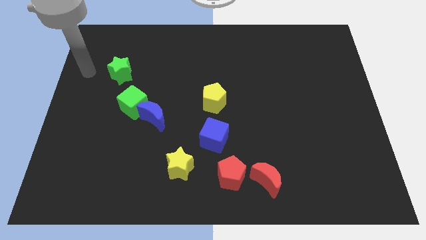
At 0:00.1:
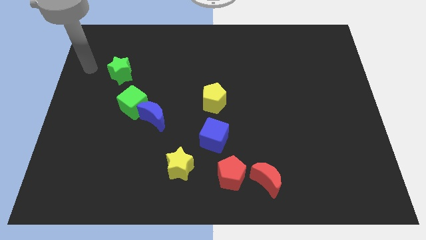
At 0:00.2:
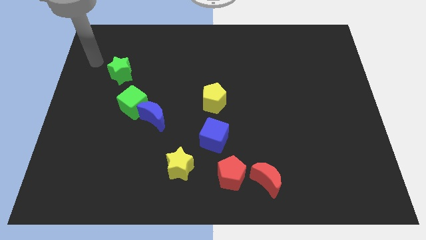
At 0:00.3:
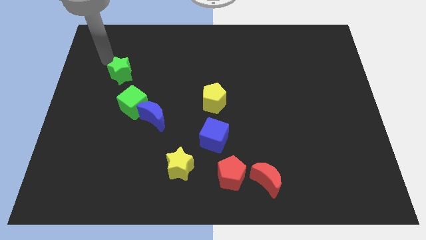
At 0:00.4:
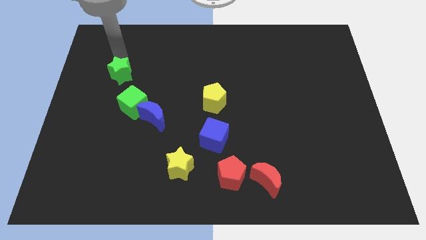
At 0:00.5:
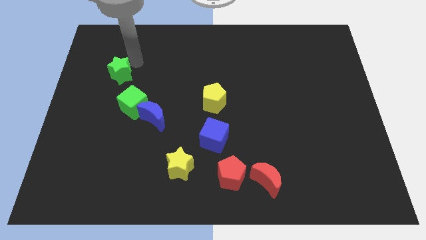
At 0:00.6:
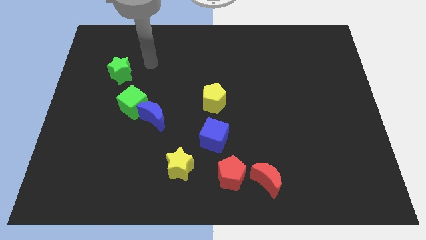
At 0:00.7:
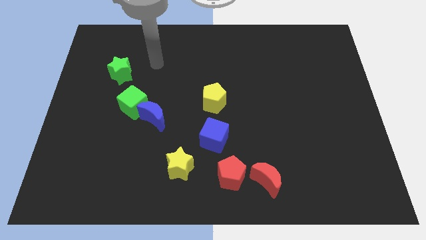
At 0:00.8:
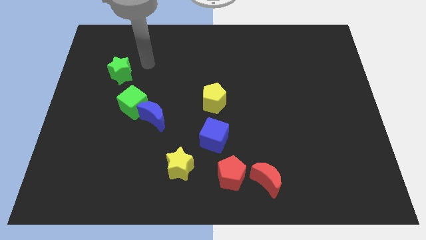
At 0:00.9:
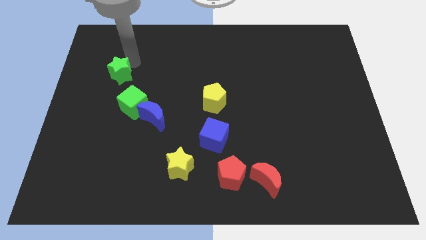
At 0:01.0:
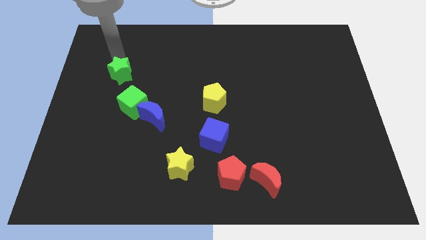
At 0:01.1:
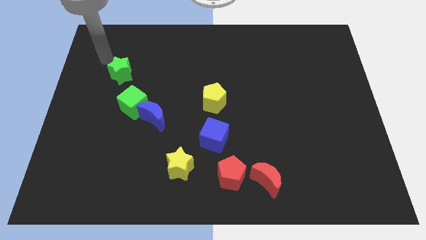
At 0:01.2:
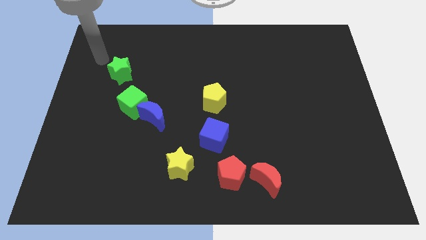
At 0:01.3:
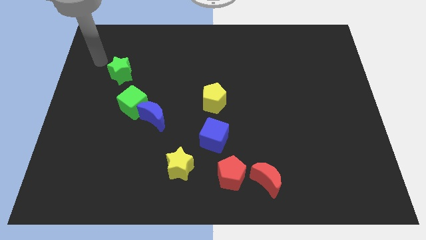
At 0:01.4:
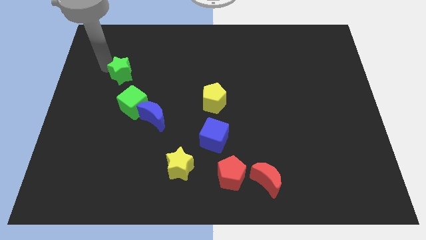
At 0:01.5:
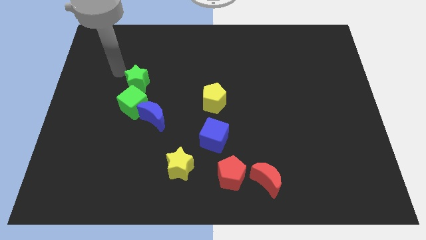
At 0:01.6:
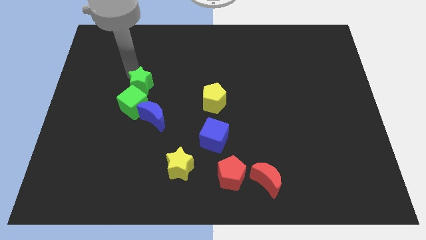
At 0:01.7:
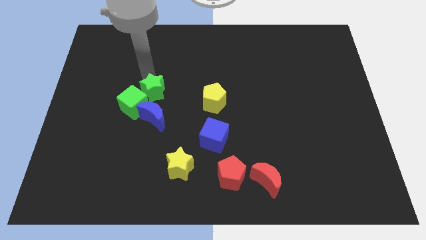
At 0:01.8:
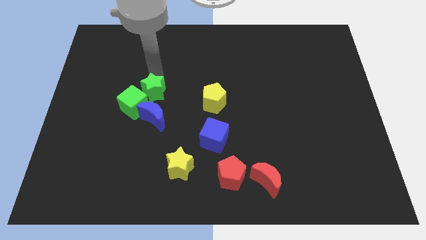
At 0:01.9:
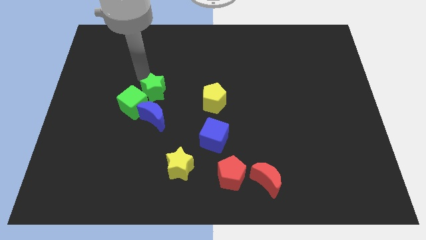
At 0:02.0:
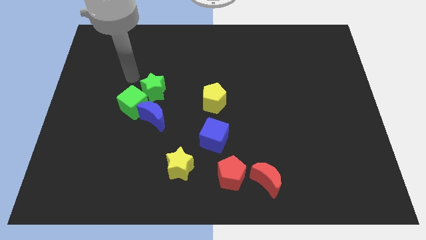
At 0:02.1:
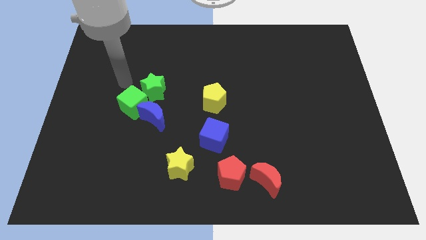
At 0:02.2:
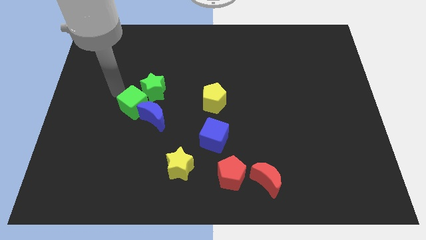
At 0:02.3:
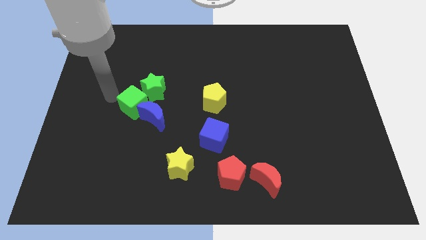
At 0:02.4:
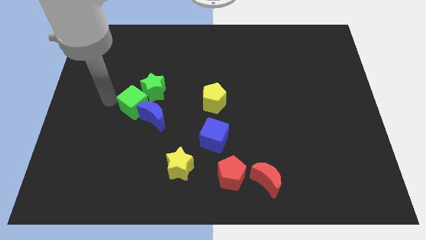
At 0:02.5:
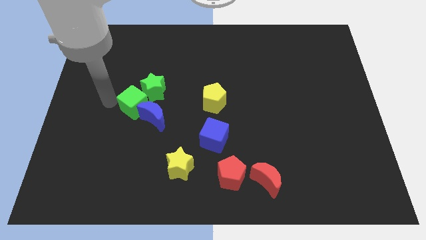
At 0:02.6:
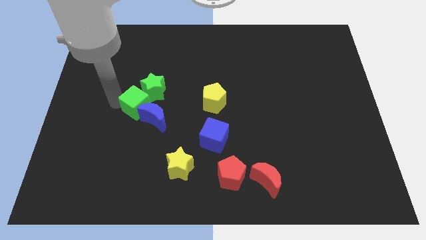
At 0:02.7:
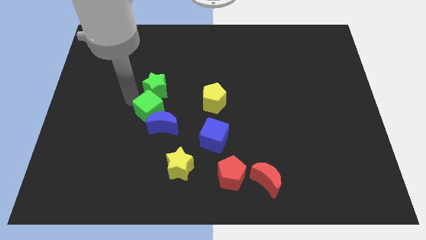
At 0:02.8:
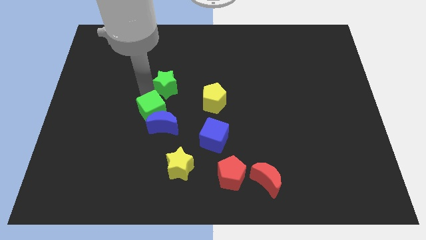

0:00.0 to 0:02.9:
move the green blocks slightly right

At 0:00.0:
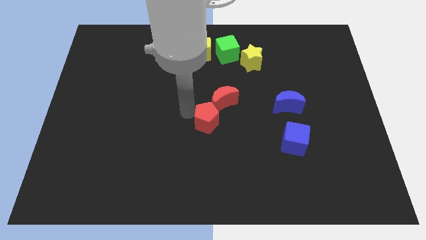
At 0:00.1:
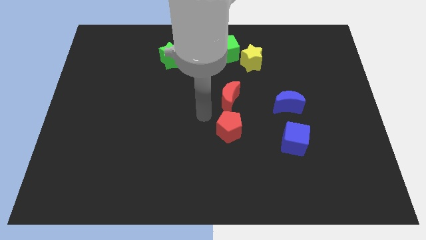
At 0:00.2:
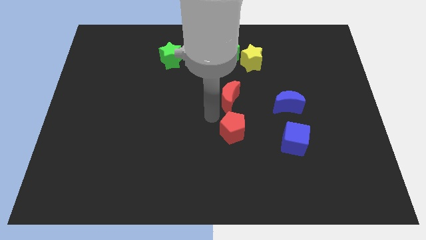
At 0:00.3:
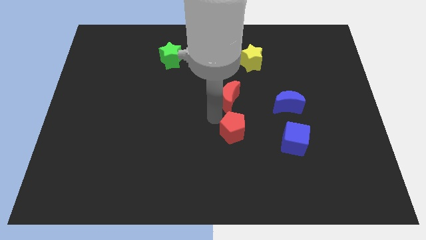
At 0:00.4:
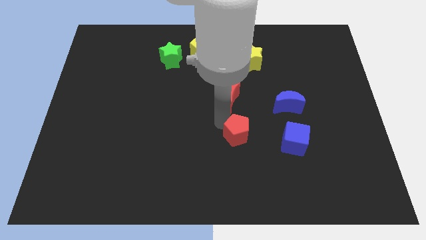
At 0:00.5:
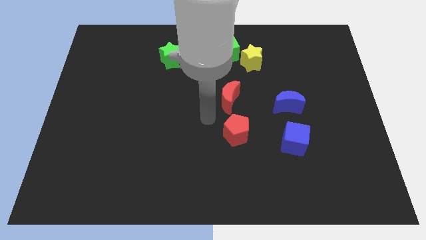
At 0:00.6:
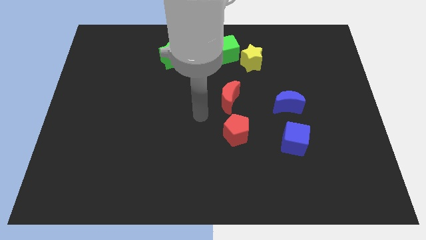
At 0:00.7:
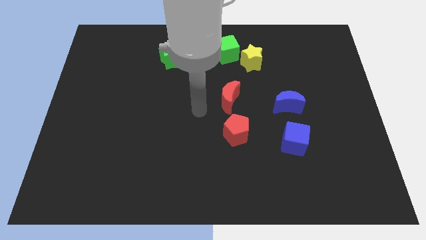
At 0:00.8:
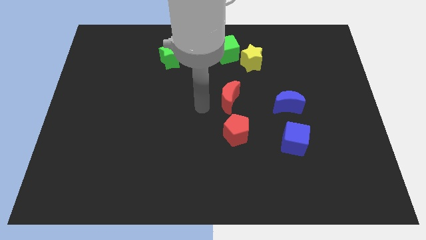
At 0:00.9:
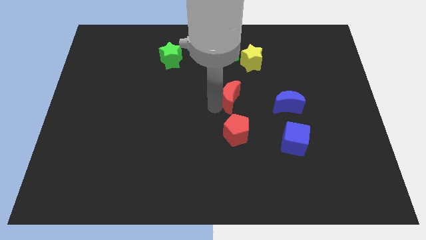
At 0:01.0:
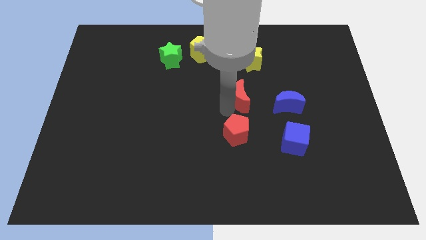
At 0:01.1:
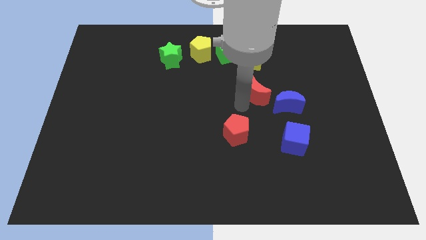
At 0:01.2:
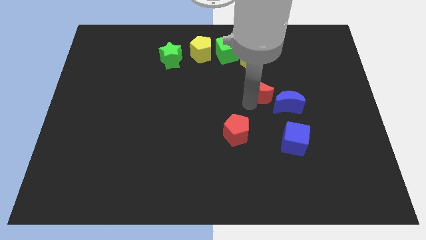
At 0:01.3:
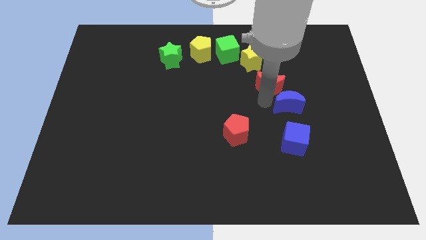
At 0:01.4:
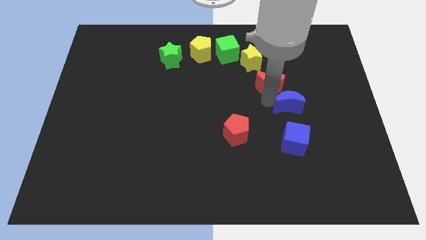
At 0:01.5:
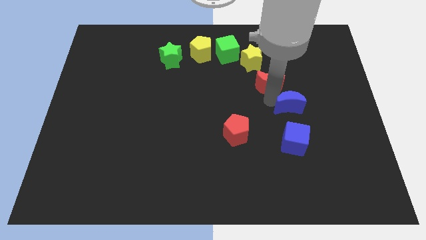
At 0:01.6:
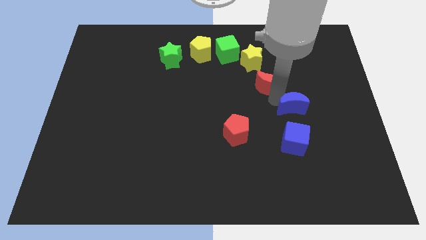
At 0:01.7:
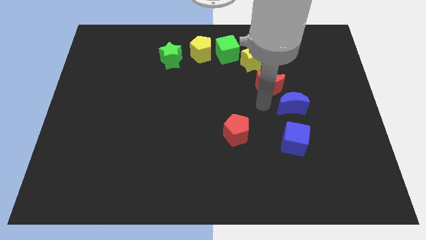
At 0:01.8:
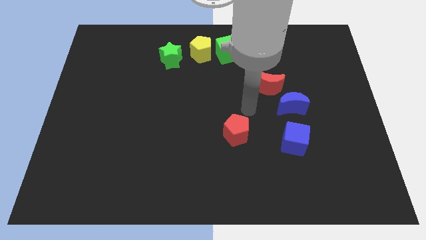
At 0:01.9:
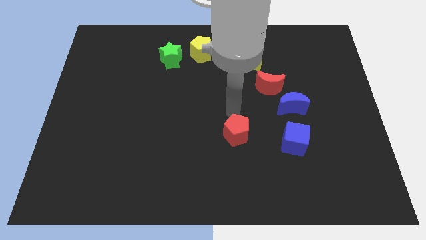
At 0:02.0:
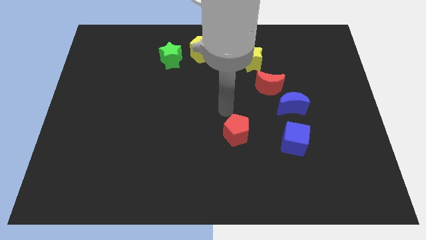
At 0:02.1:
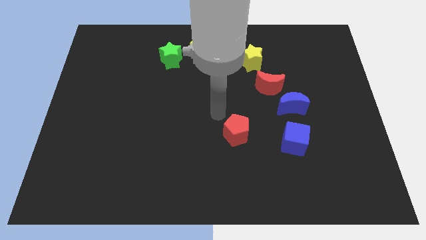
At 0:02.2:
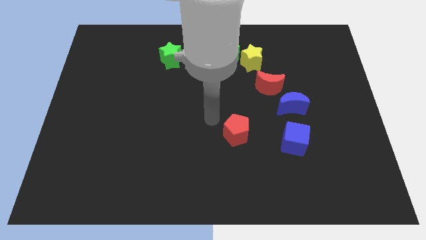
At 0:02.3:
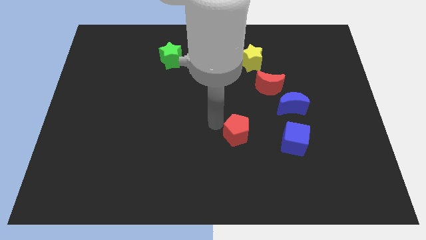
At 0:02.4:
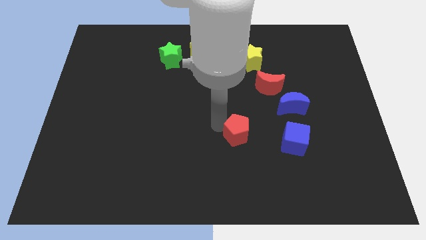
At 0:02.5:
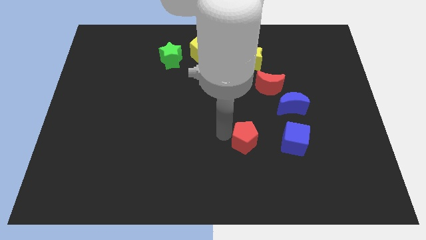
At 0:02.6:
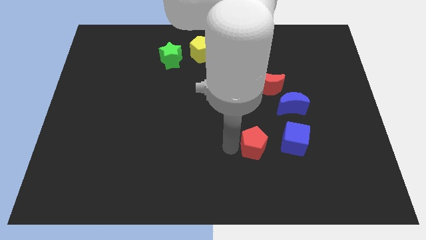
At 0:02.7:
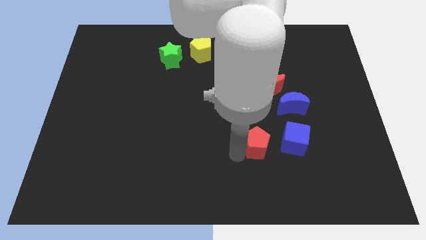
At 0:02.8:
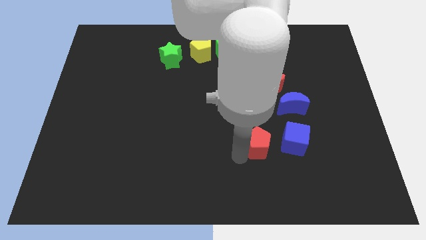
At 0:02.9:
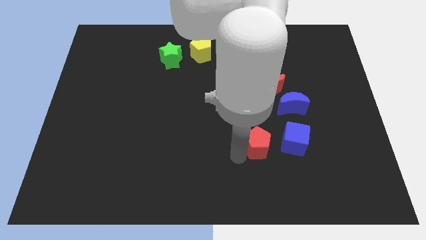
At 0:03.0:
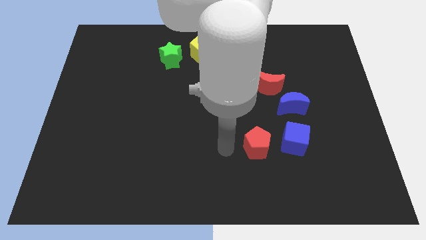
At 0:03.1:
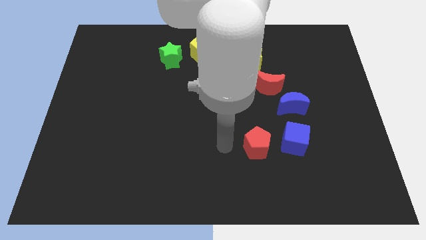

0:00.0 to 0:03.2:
place the red moon at the top of the blue moon

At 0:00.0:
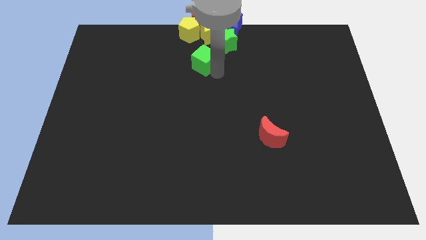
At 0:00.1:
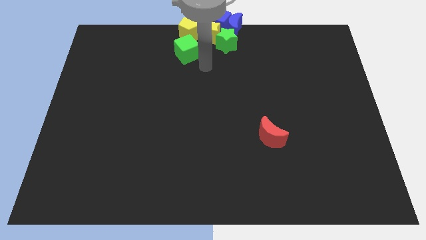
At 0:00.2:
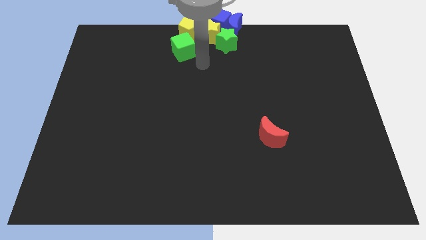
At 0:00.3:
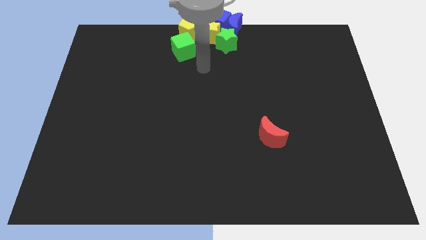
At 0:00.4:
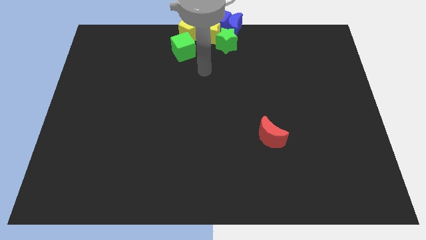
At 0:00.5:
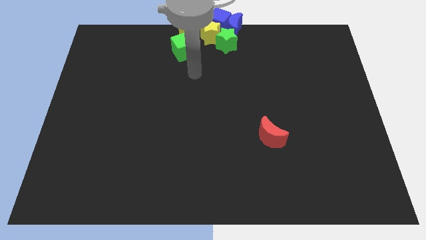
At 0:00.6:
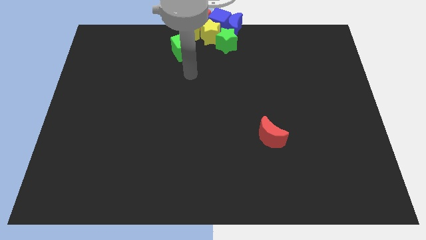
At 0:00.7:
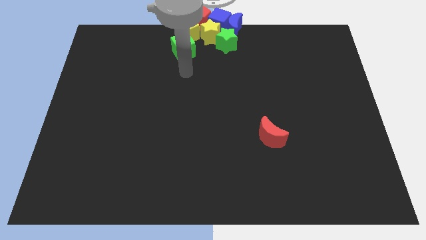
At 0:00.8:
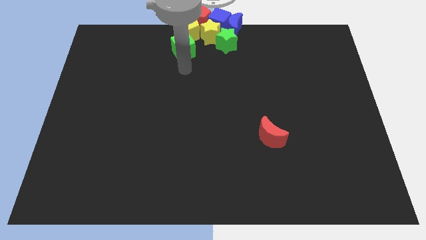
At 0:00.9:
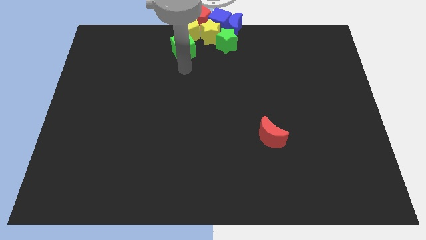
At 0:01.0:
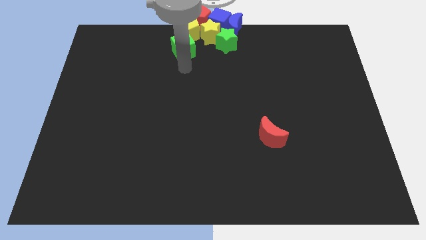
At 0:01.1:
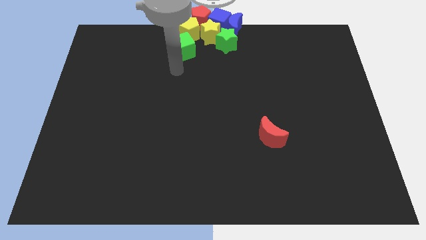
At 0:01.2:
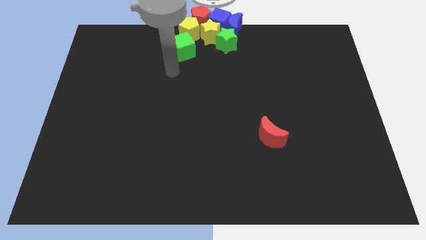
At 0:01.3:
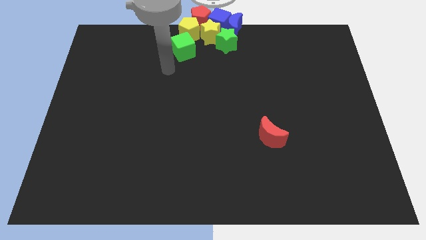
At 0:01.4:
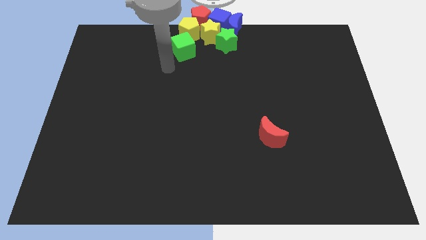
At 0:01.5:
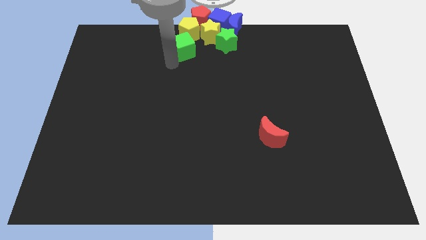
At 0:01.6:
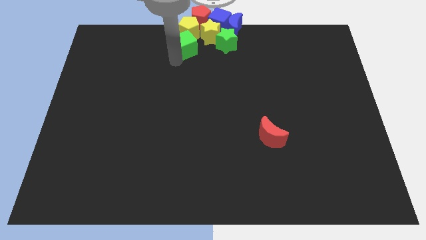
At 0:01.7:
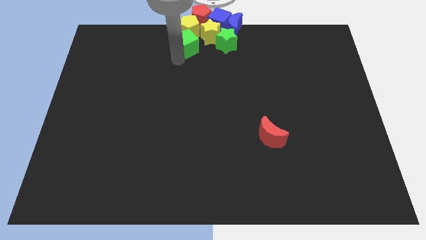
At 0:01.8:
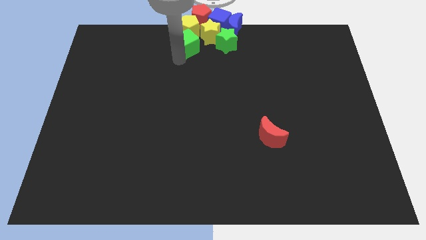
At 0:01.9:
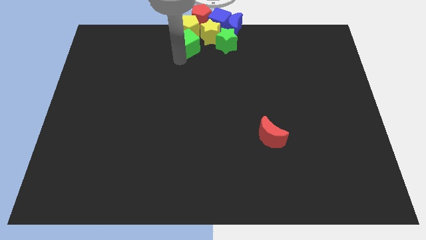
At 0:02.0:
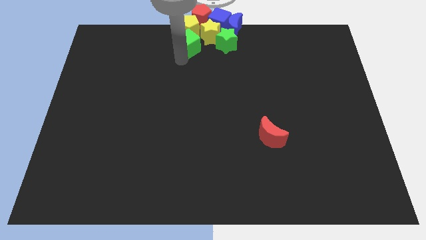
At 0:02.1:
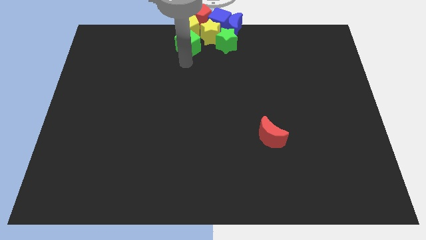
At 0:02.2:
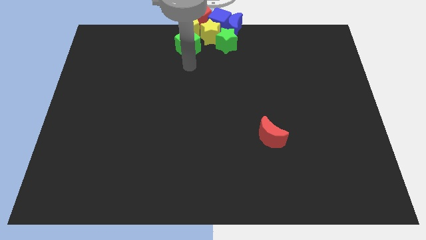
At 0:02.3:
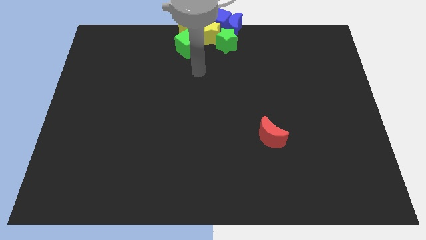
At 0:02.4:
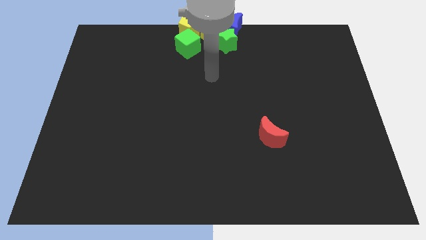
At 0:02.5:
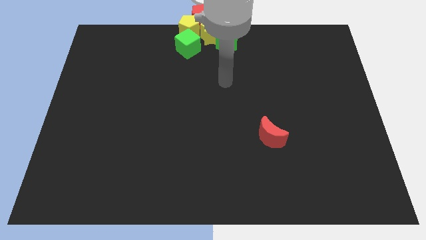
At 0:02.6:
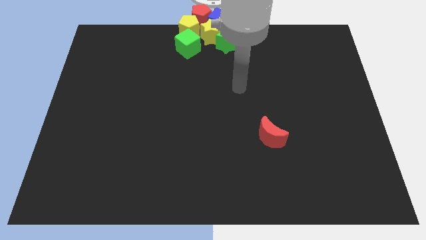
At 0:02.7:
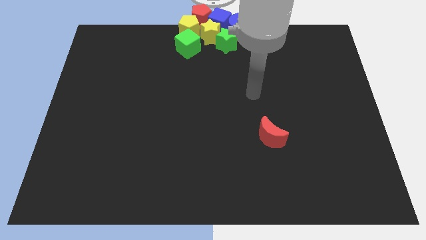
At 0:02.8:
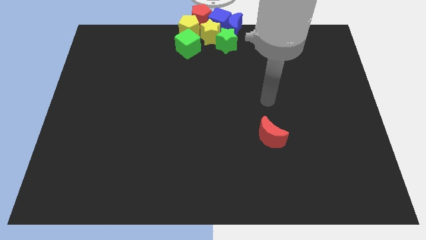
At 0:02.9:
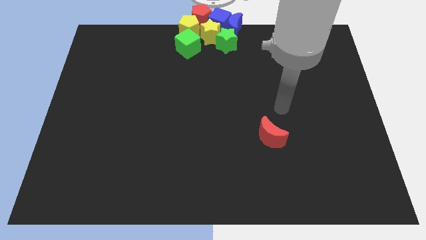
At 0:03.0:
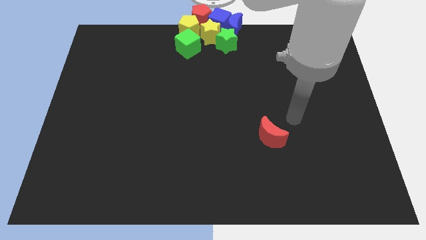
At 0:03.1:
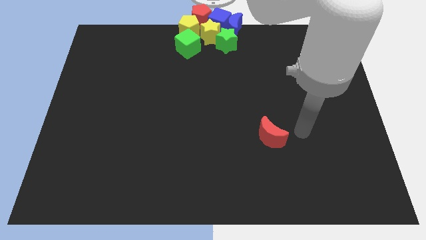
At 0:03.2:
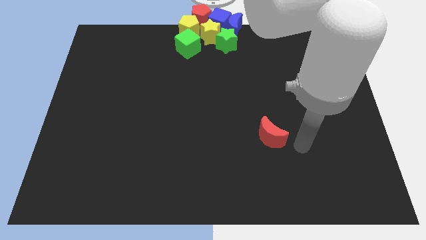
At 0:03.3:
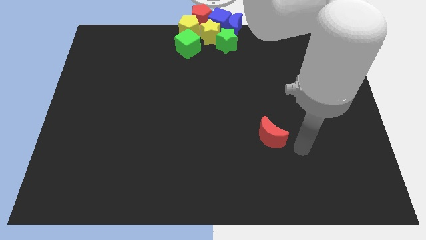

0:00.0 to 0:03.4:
push the green cube into the yellow pentagon
